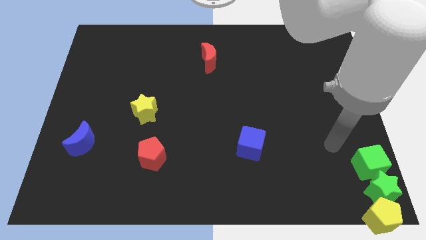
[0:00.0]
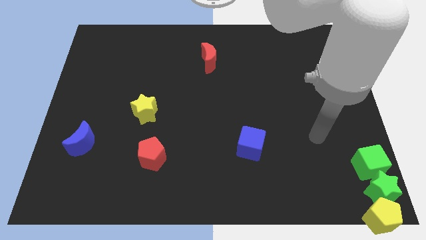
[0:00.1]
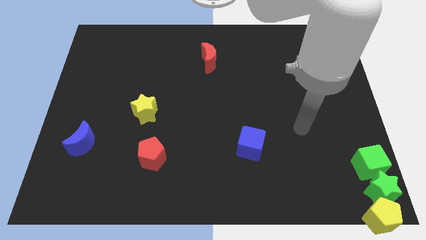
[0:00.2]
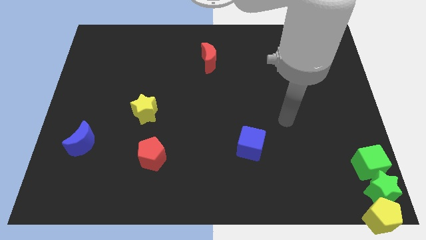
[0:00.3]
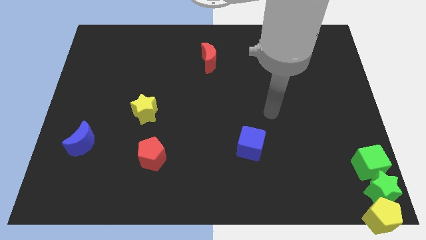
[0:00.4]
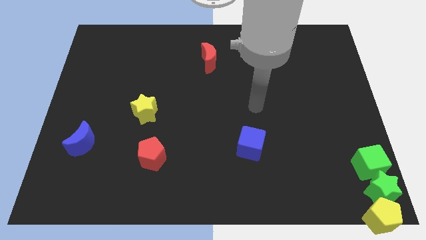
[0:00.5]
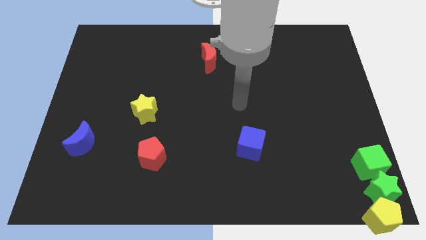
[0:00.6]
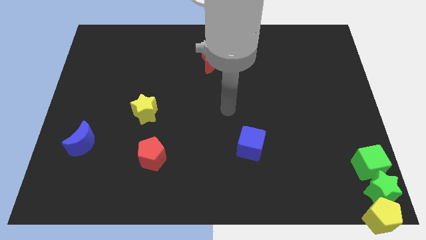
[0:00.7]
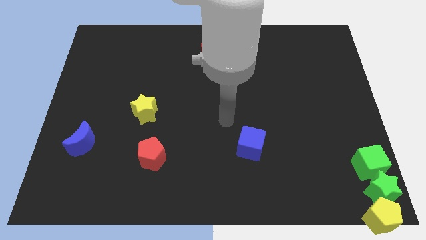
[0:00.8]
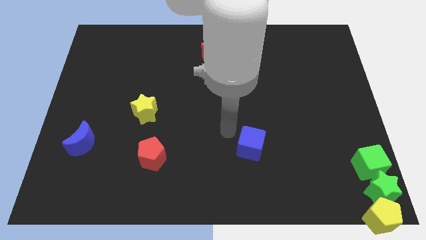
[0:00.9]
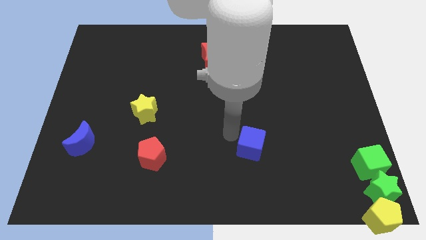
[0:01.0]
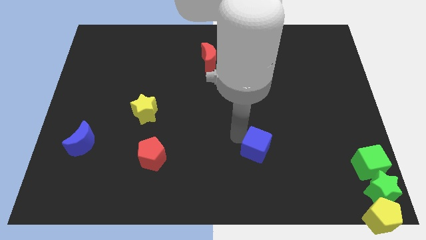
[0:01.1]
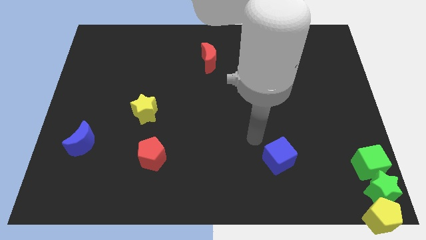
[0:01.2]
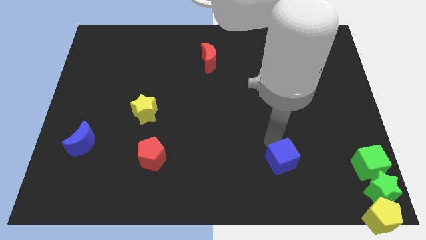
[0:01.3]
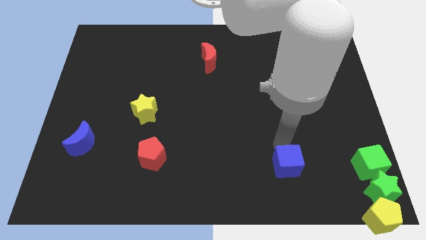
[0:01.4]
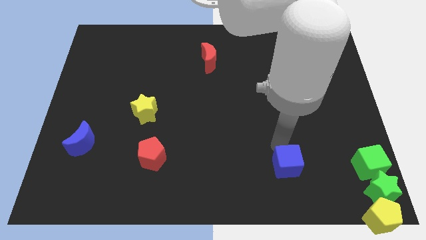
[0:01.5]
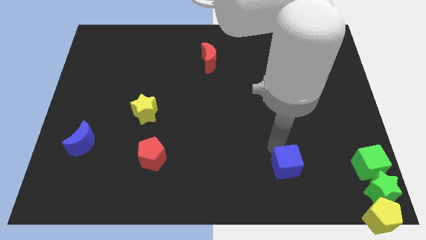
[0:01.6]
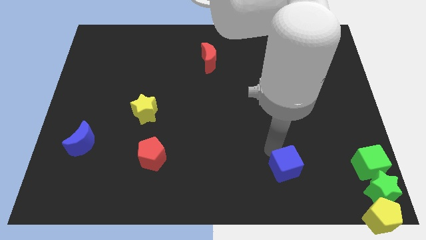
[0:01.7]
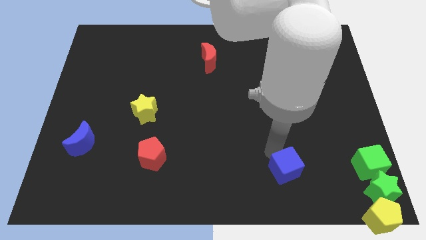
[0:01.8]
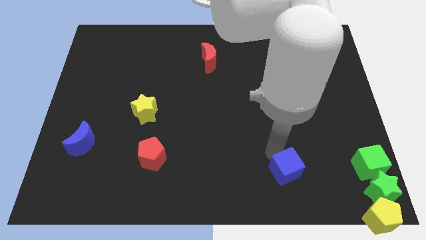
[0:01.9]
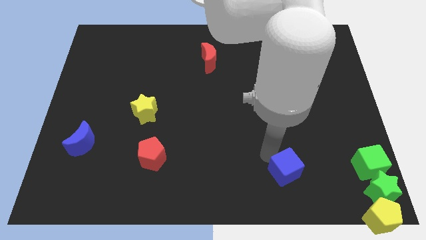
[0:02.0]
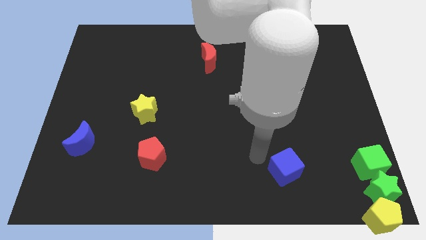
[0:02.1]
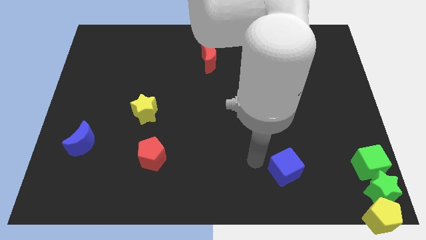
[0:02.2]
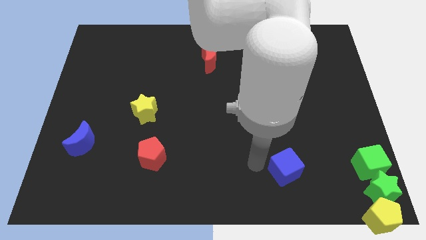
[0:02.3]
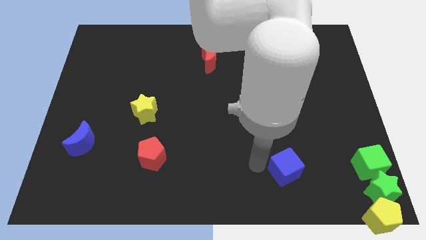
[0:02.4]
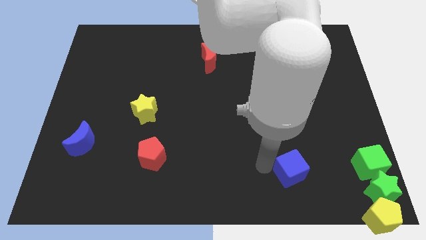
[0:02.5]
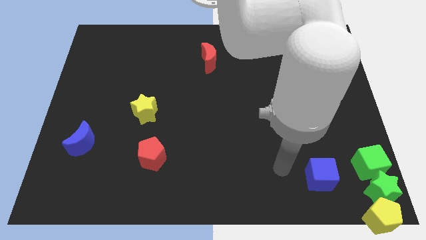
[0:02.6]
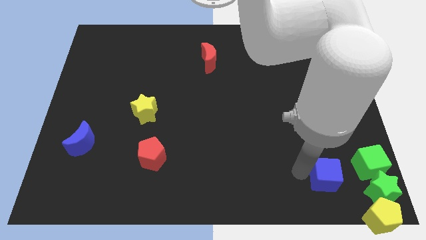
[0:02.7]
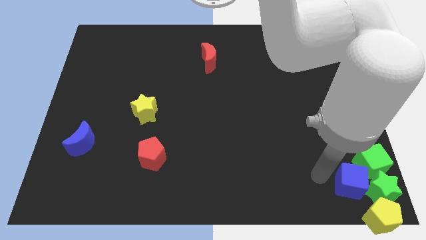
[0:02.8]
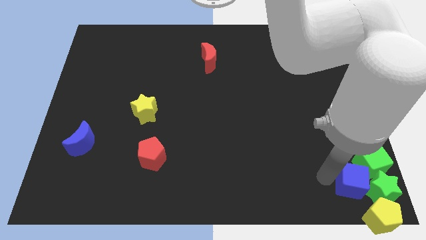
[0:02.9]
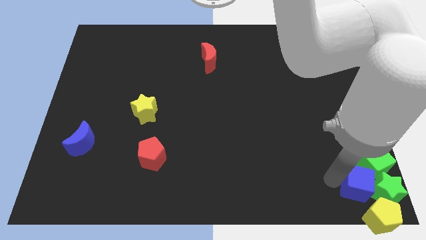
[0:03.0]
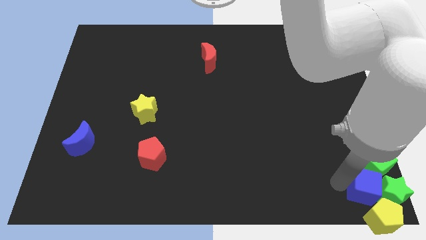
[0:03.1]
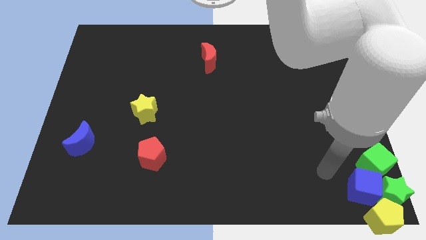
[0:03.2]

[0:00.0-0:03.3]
move the blue cube into the green blocks

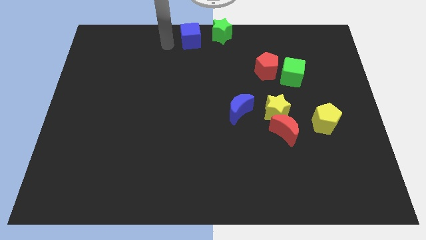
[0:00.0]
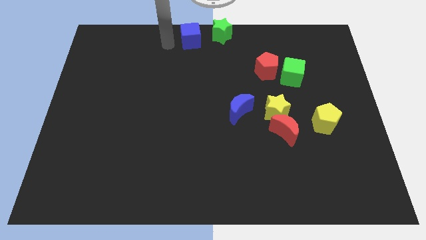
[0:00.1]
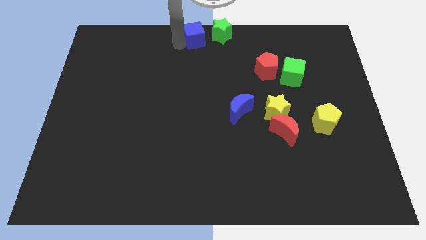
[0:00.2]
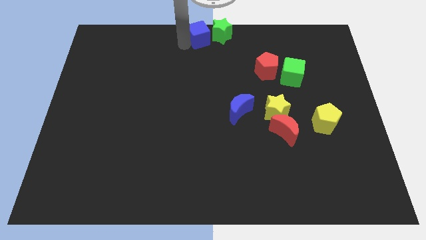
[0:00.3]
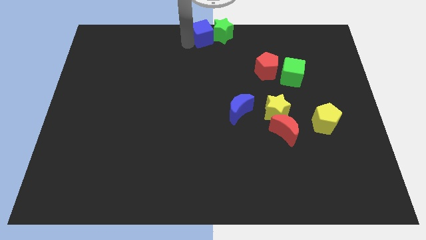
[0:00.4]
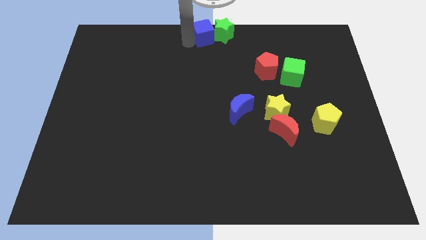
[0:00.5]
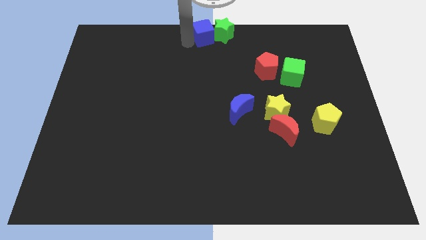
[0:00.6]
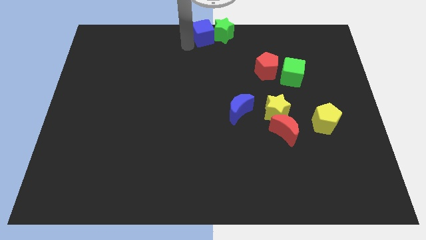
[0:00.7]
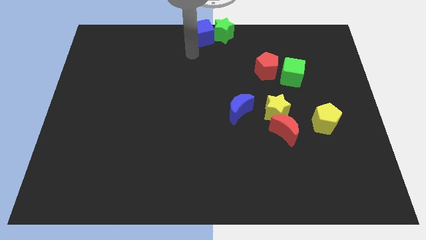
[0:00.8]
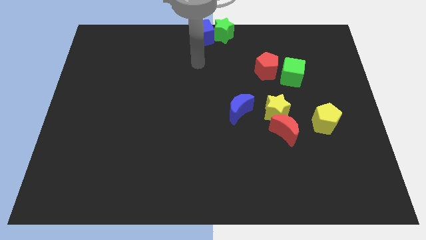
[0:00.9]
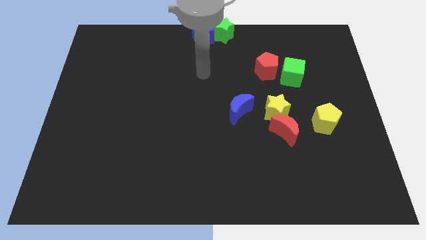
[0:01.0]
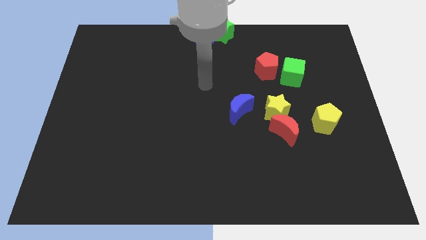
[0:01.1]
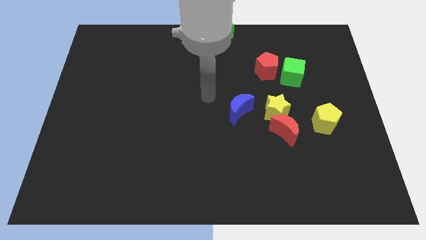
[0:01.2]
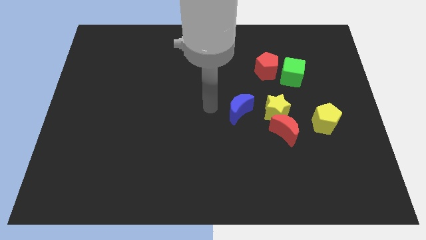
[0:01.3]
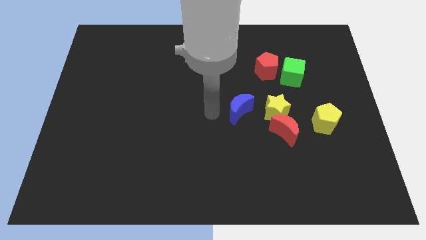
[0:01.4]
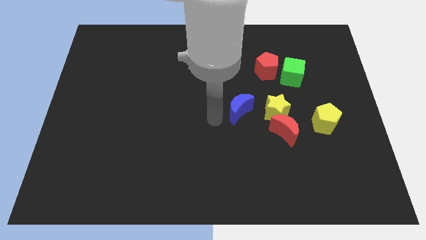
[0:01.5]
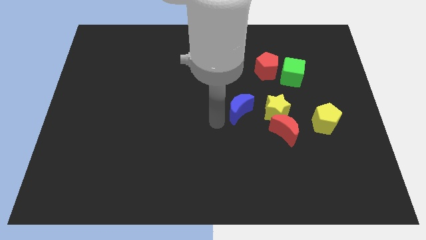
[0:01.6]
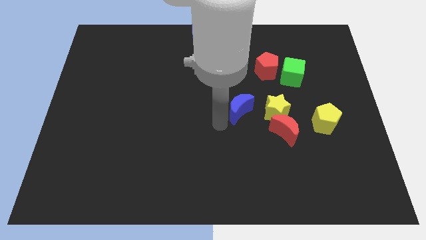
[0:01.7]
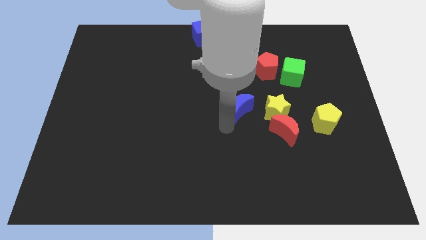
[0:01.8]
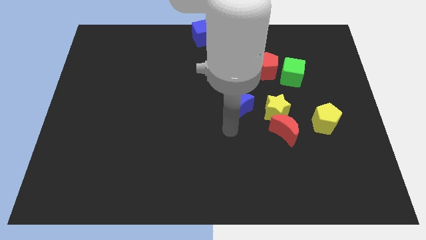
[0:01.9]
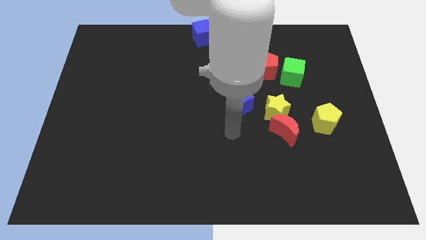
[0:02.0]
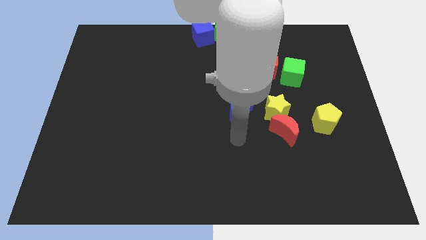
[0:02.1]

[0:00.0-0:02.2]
place the arm below the blue crescent

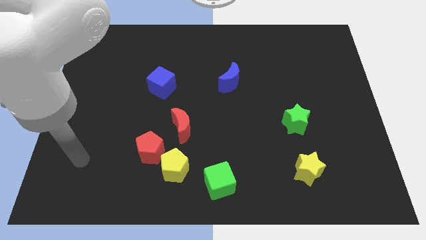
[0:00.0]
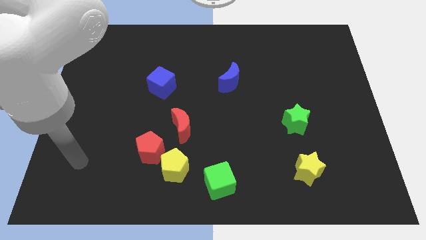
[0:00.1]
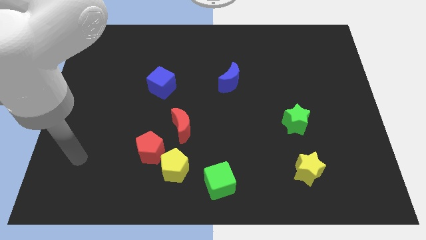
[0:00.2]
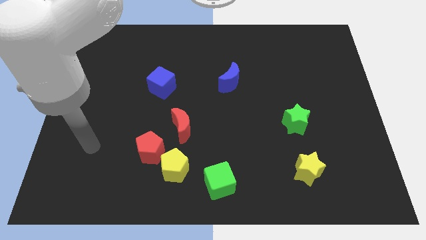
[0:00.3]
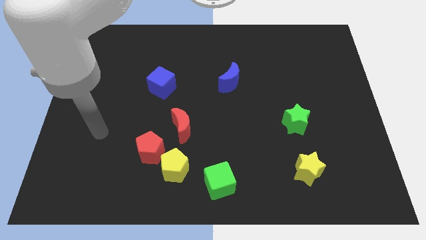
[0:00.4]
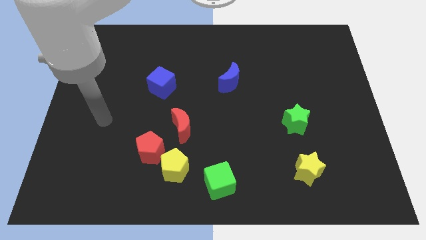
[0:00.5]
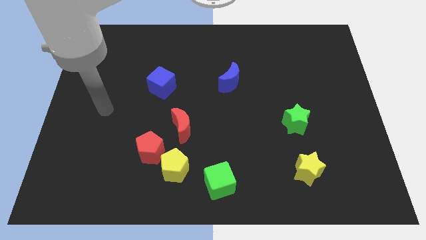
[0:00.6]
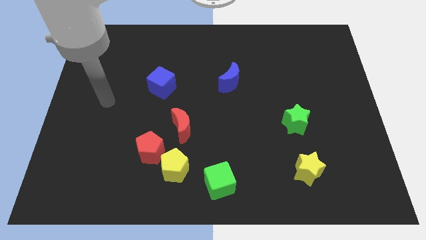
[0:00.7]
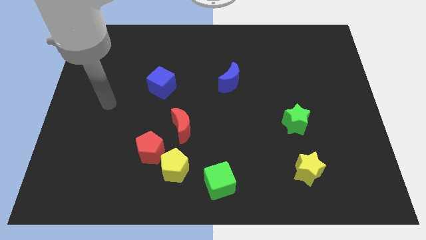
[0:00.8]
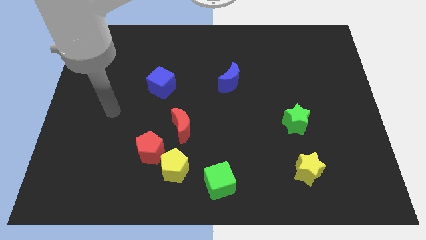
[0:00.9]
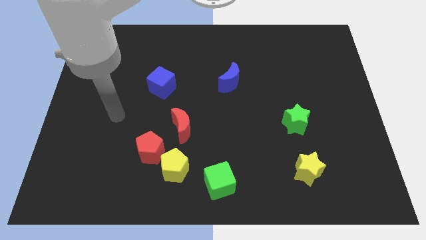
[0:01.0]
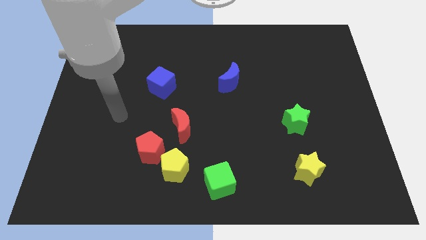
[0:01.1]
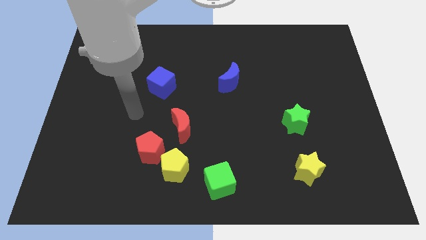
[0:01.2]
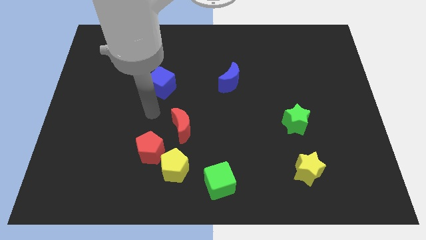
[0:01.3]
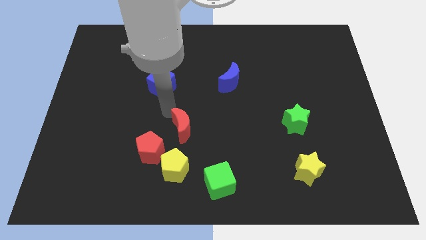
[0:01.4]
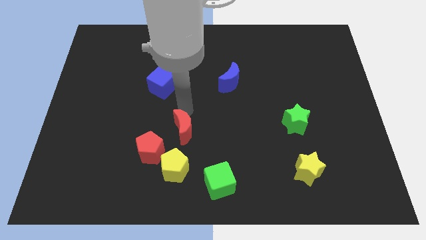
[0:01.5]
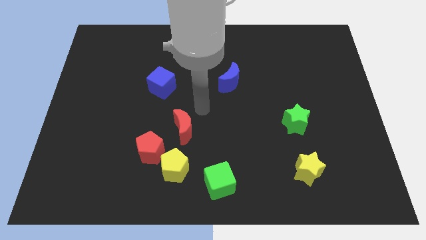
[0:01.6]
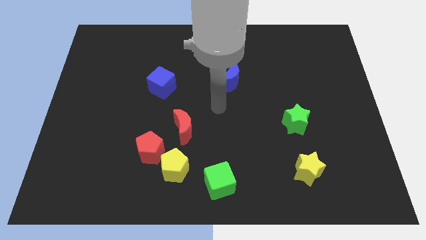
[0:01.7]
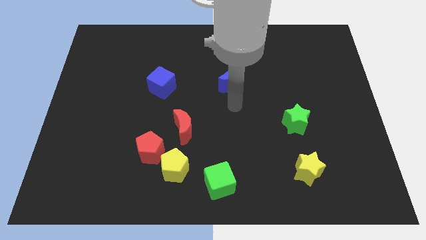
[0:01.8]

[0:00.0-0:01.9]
slightly touch the red moon and move away

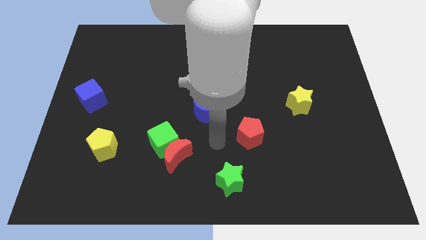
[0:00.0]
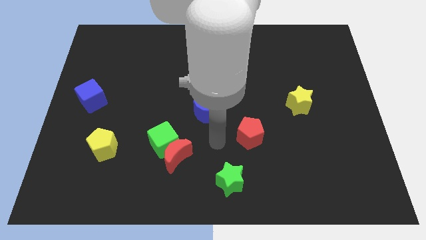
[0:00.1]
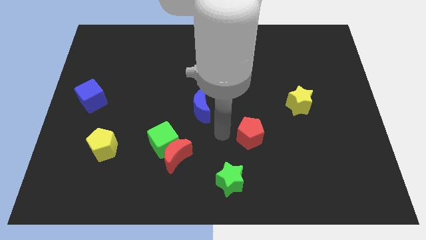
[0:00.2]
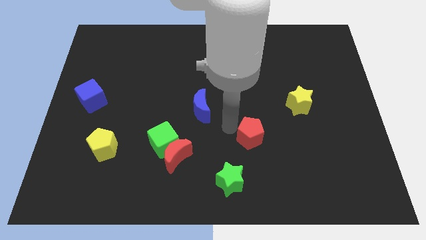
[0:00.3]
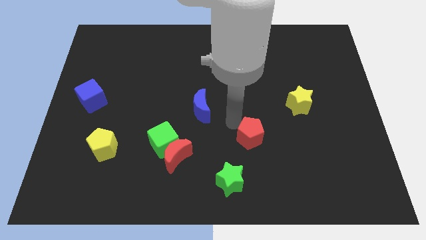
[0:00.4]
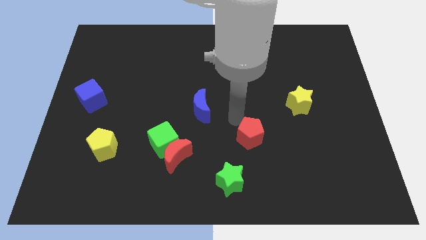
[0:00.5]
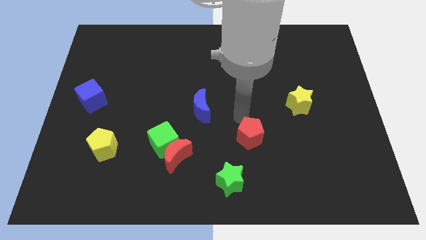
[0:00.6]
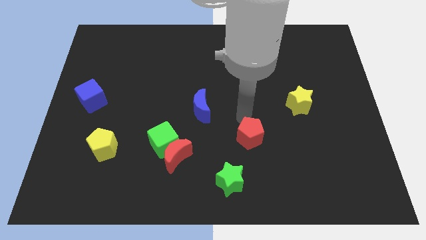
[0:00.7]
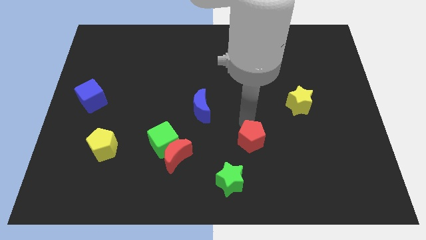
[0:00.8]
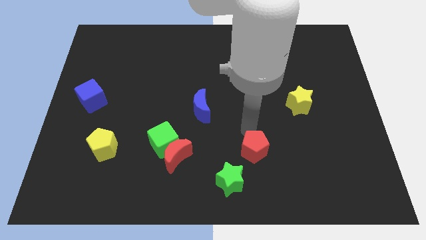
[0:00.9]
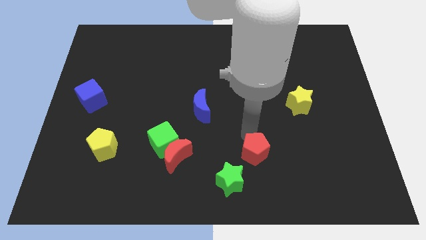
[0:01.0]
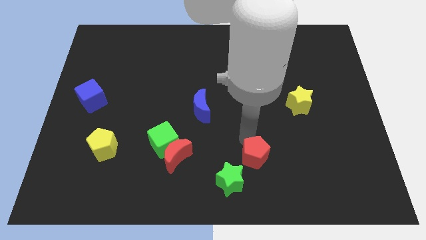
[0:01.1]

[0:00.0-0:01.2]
move red pentagon slightly down

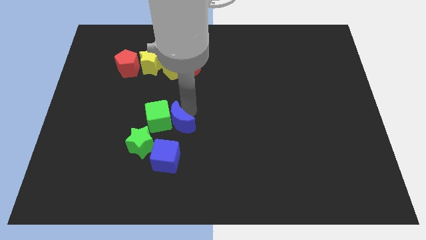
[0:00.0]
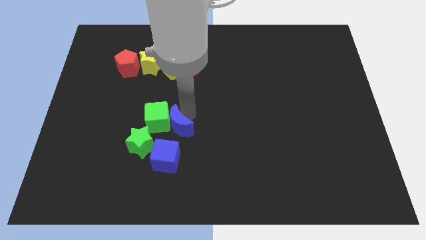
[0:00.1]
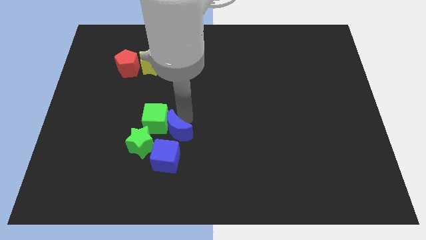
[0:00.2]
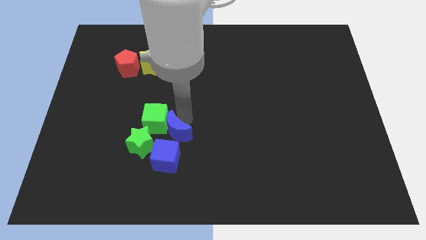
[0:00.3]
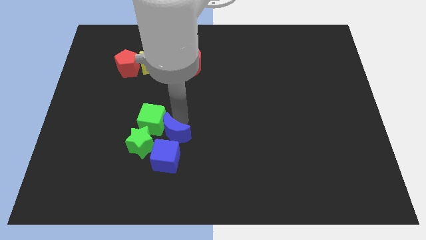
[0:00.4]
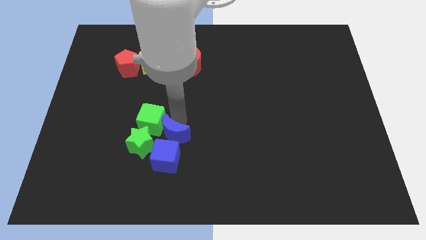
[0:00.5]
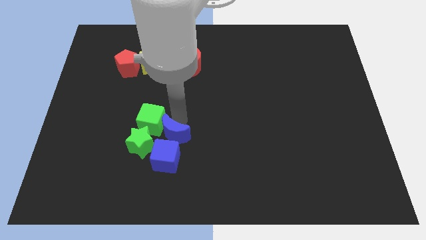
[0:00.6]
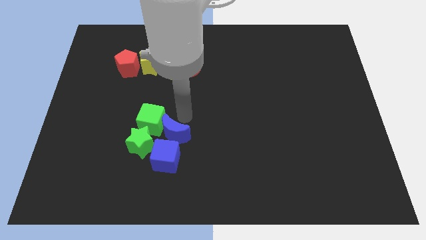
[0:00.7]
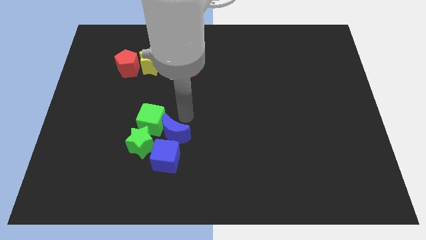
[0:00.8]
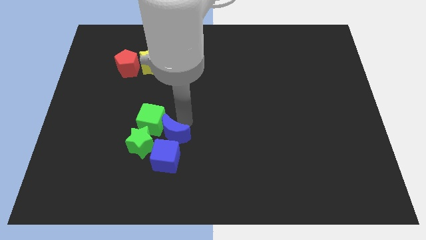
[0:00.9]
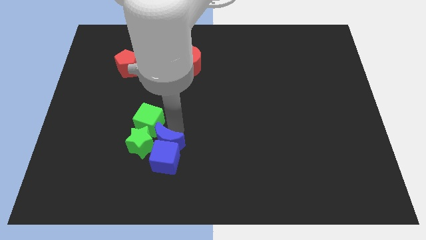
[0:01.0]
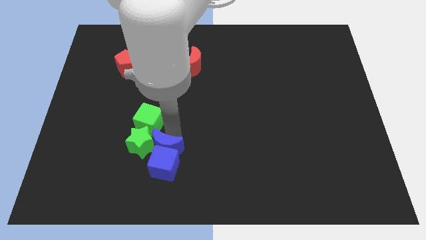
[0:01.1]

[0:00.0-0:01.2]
move the blue crescent to the top of the blue cube
